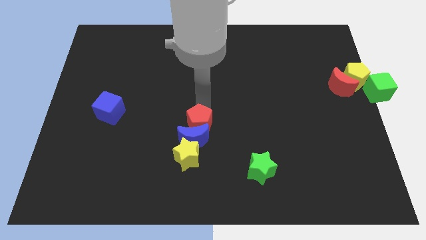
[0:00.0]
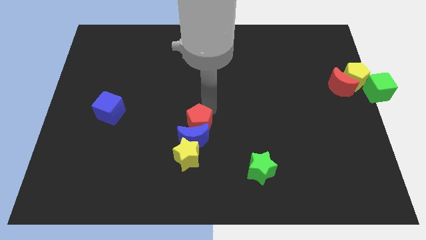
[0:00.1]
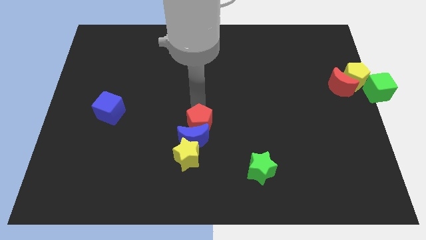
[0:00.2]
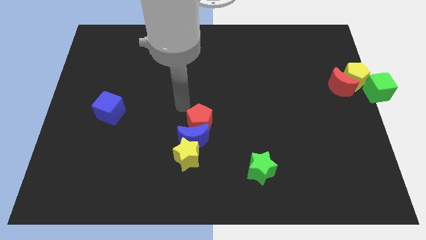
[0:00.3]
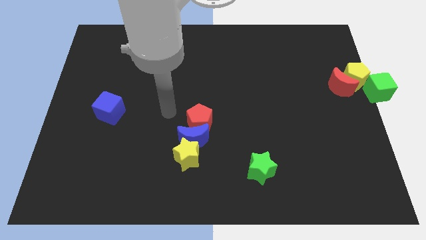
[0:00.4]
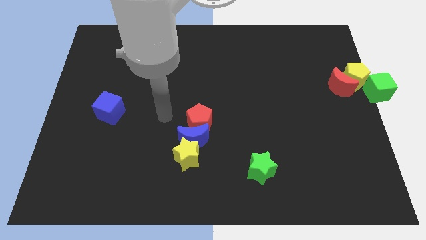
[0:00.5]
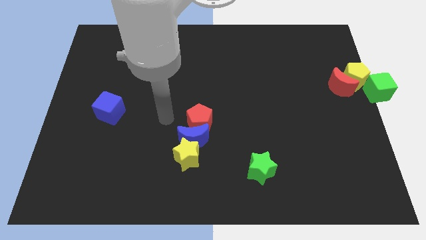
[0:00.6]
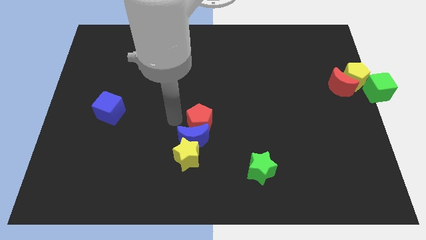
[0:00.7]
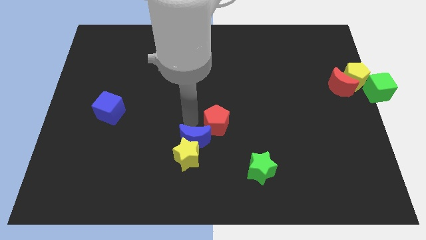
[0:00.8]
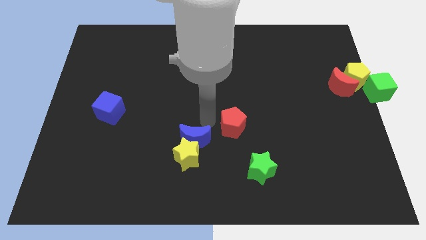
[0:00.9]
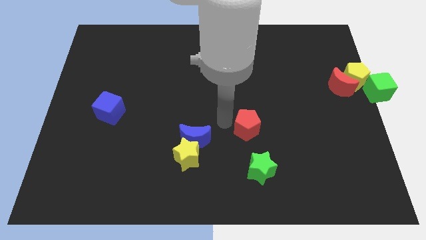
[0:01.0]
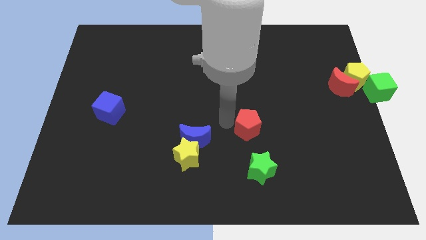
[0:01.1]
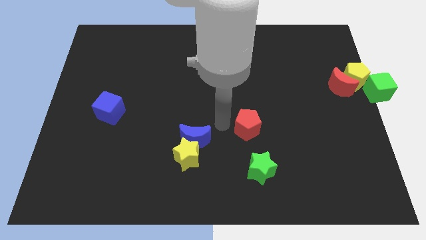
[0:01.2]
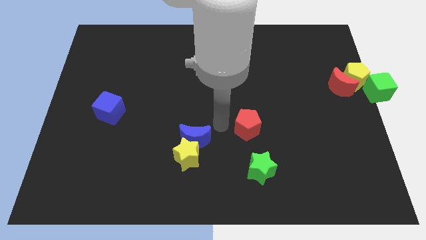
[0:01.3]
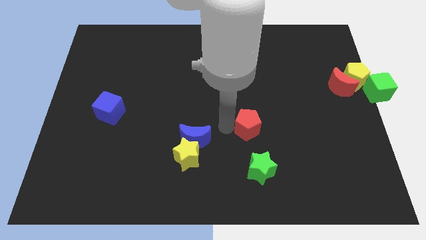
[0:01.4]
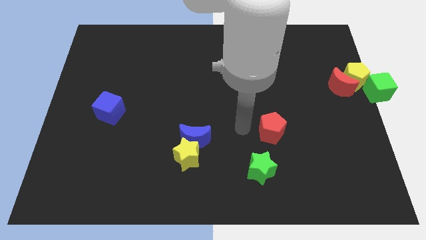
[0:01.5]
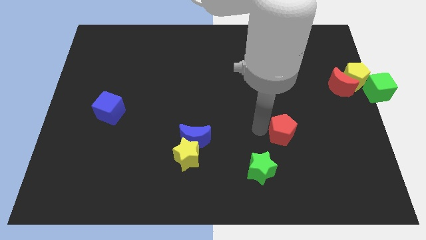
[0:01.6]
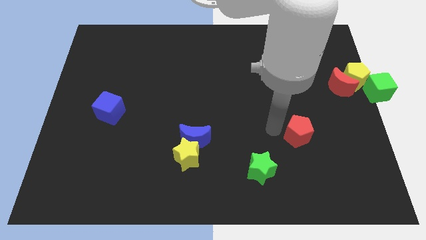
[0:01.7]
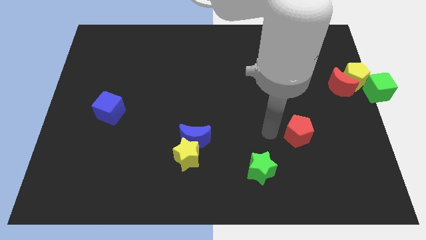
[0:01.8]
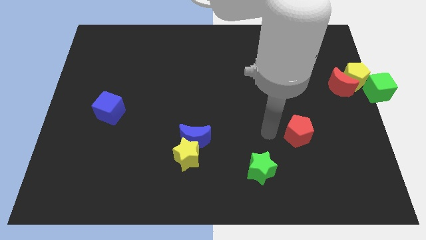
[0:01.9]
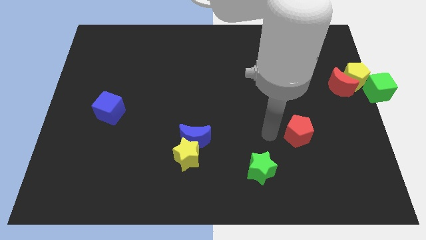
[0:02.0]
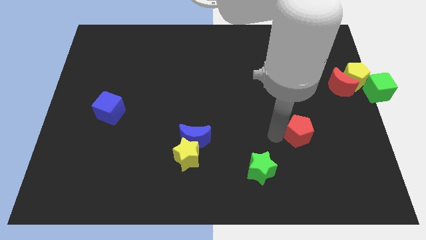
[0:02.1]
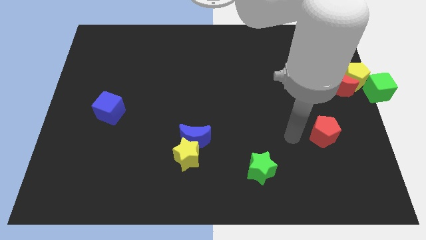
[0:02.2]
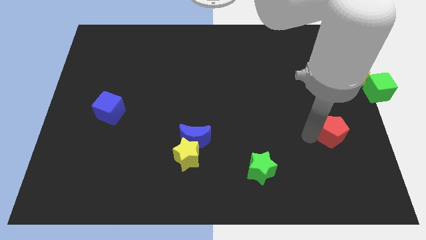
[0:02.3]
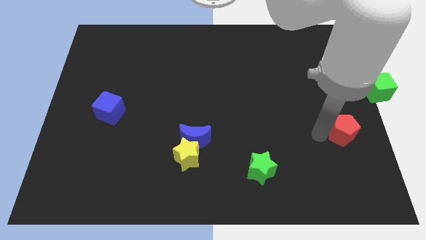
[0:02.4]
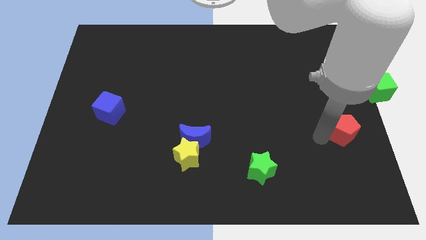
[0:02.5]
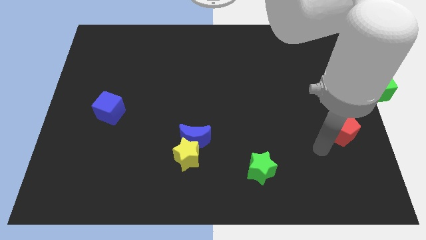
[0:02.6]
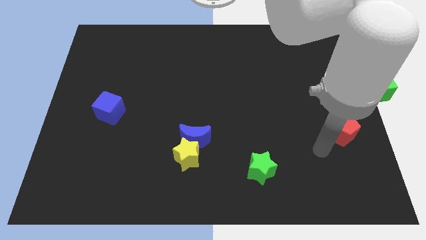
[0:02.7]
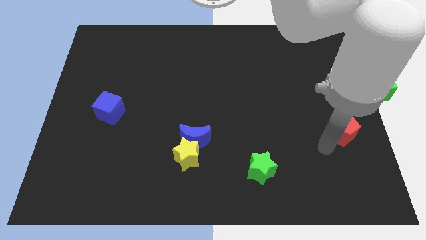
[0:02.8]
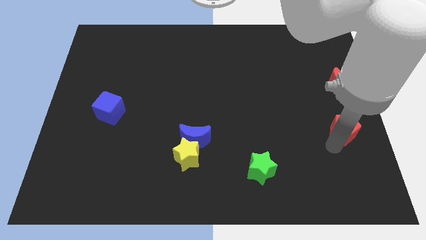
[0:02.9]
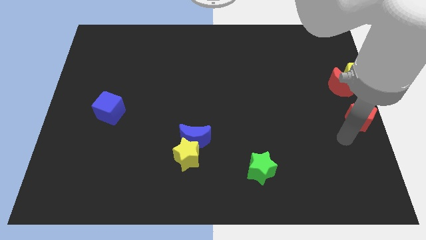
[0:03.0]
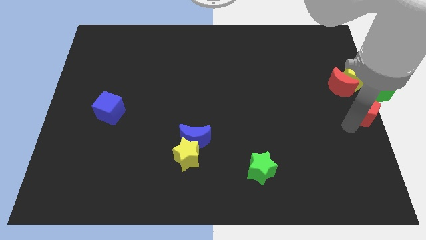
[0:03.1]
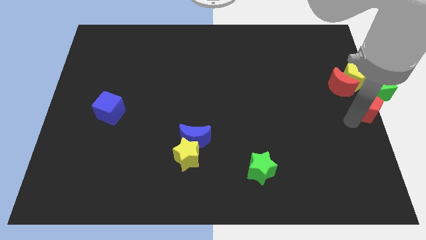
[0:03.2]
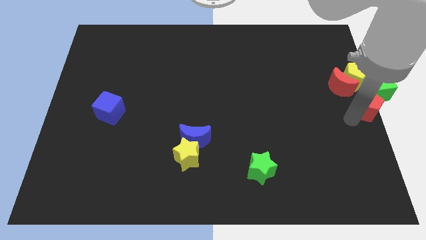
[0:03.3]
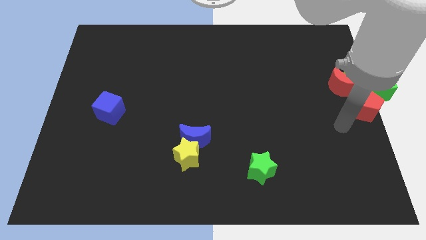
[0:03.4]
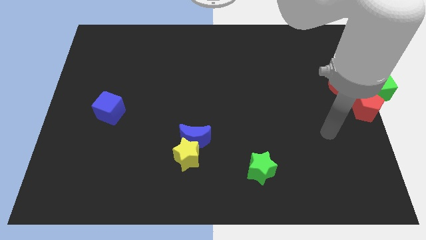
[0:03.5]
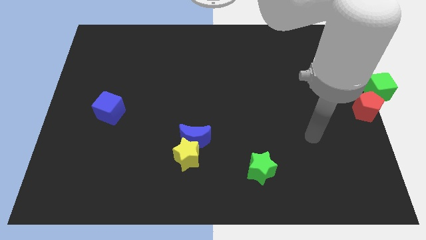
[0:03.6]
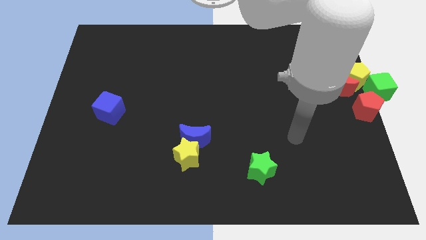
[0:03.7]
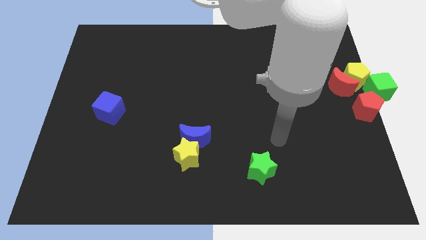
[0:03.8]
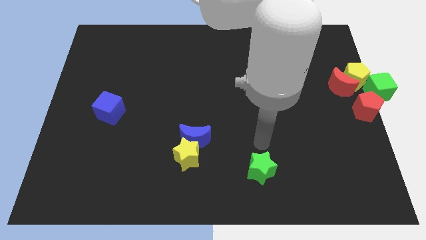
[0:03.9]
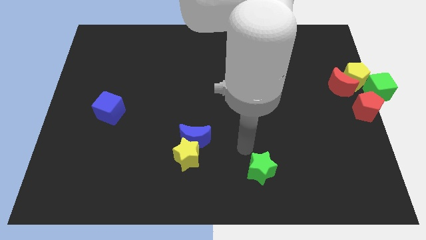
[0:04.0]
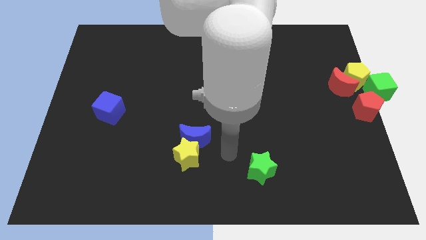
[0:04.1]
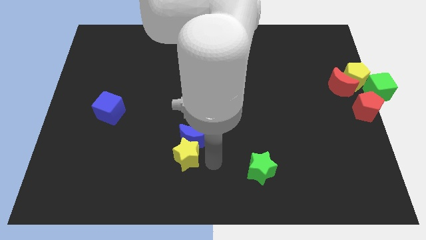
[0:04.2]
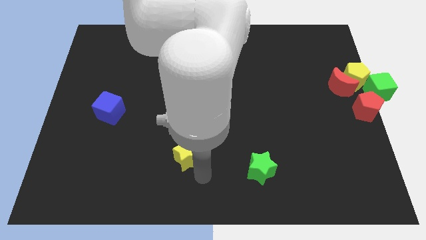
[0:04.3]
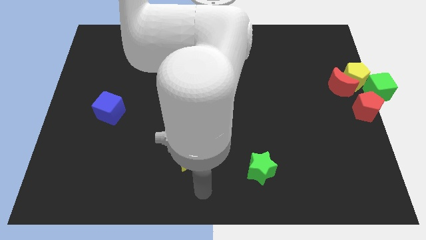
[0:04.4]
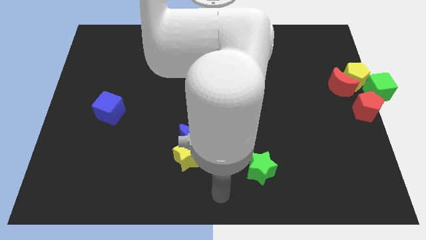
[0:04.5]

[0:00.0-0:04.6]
push red pentagon close to green cube

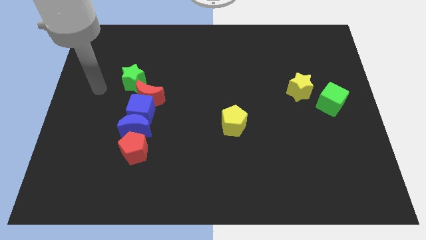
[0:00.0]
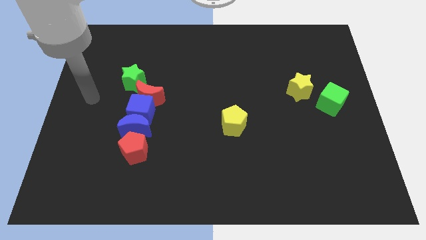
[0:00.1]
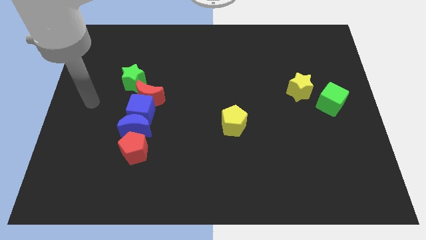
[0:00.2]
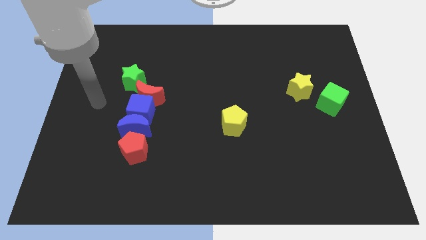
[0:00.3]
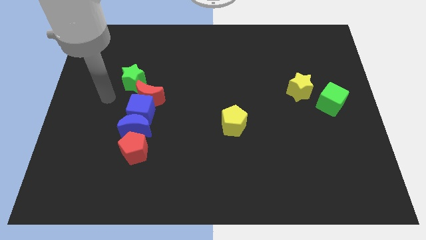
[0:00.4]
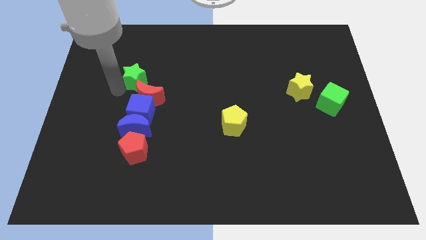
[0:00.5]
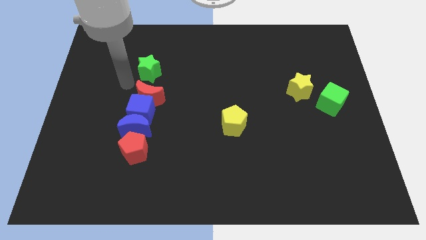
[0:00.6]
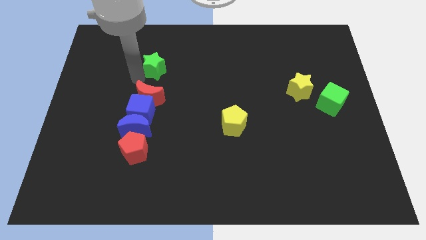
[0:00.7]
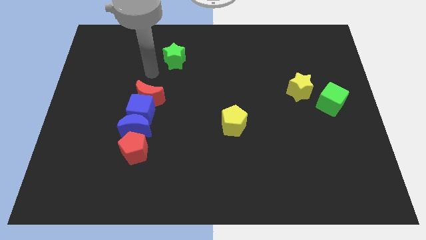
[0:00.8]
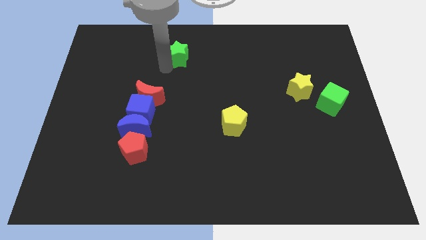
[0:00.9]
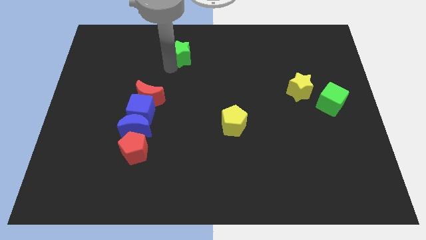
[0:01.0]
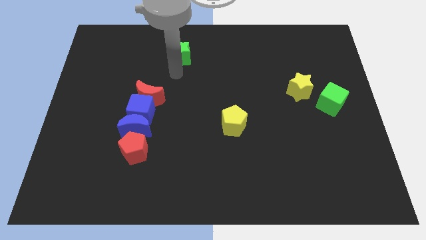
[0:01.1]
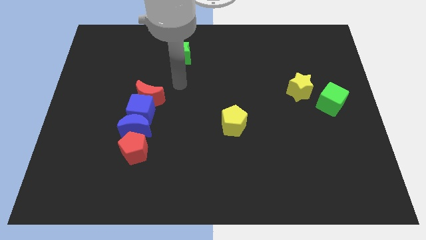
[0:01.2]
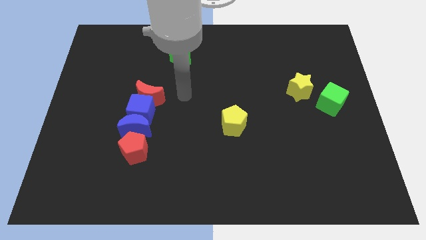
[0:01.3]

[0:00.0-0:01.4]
move the green star to the top centre of the board

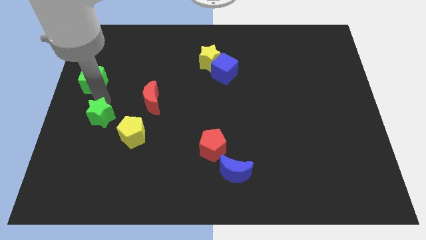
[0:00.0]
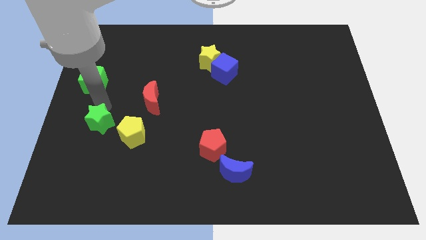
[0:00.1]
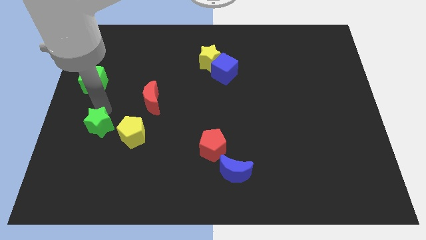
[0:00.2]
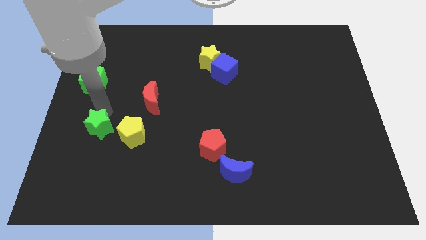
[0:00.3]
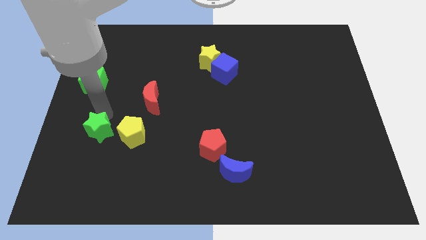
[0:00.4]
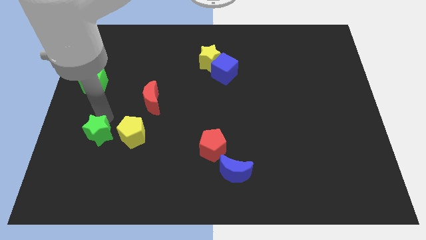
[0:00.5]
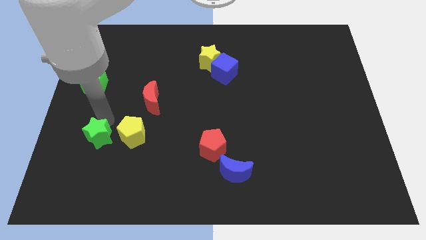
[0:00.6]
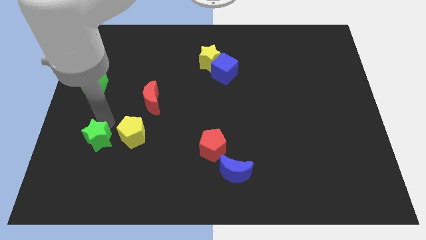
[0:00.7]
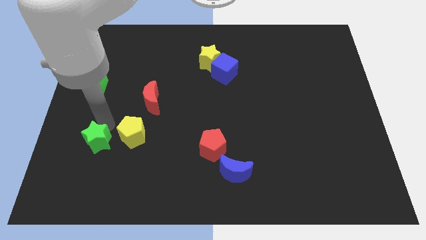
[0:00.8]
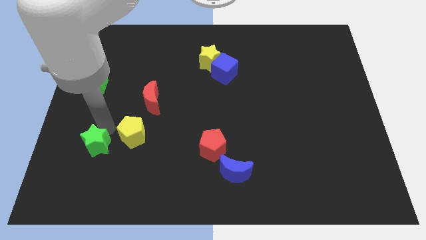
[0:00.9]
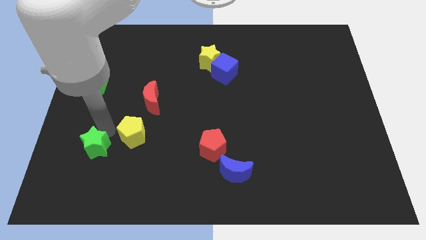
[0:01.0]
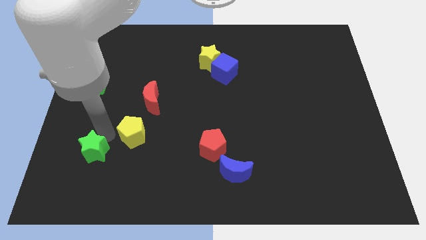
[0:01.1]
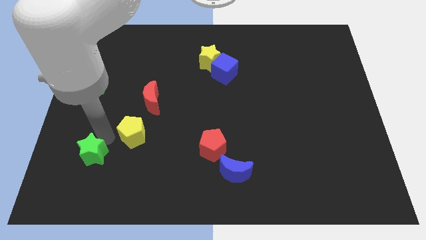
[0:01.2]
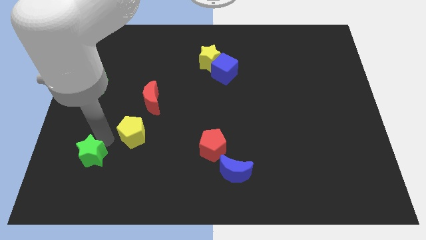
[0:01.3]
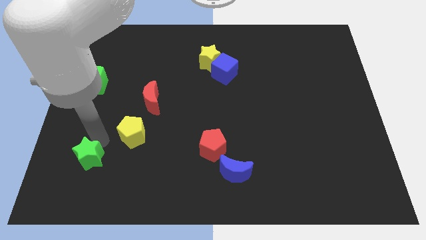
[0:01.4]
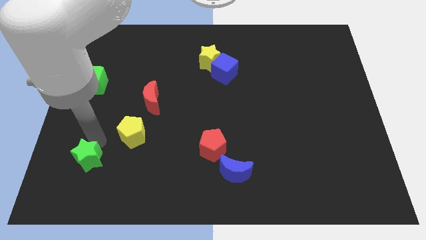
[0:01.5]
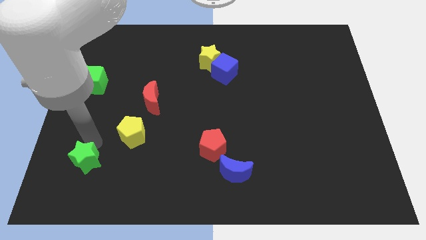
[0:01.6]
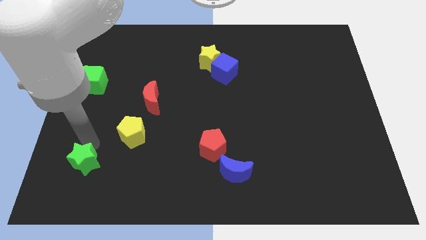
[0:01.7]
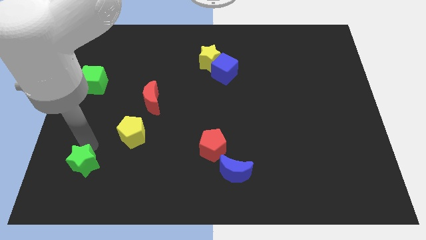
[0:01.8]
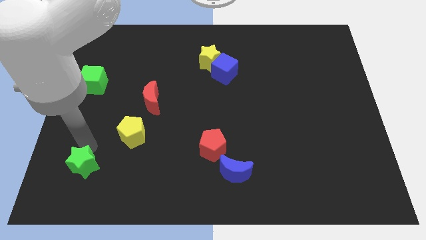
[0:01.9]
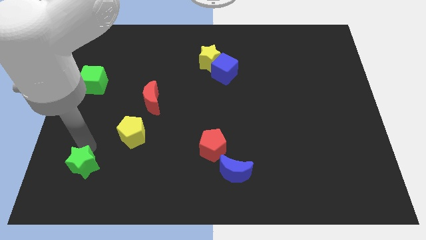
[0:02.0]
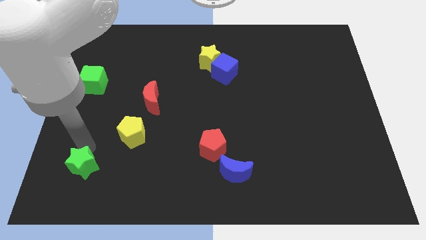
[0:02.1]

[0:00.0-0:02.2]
push the green star to the bottom

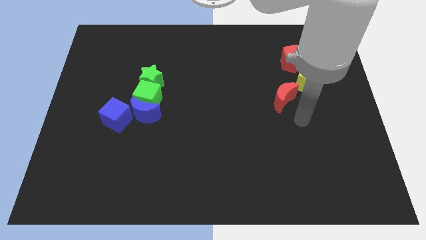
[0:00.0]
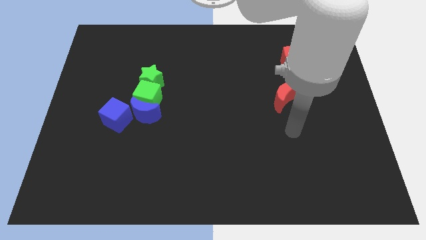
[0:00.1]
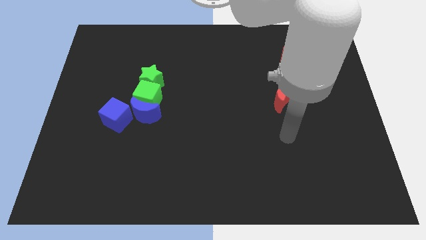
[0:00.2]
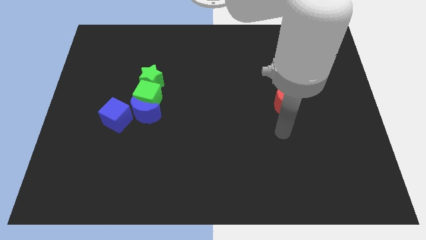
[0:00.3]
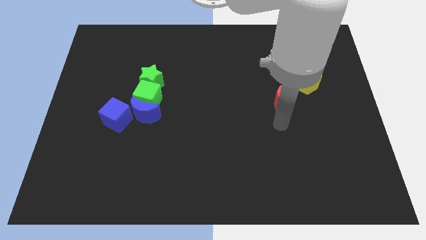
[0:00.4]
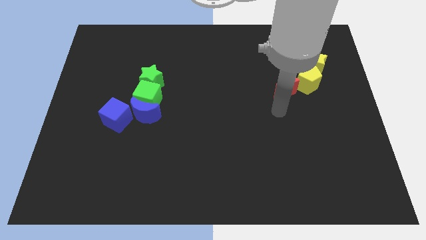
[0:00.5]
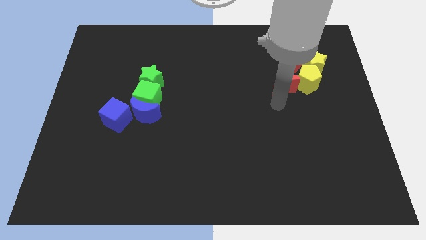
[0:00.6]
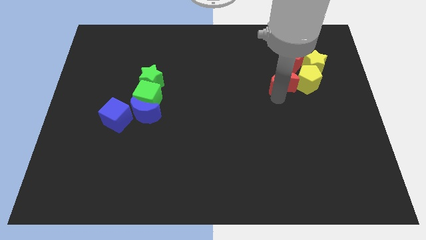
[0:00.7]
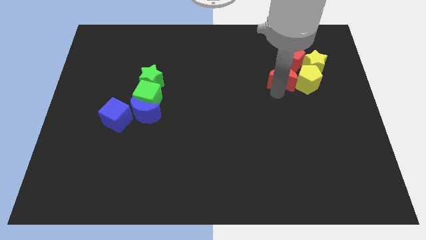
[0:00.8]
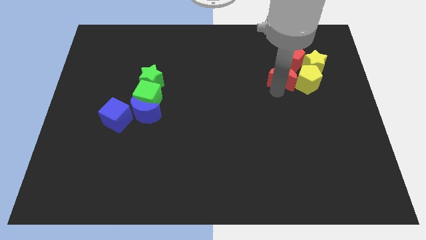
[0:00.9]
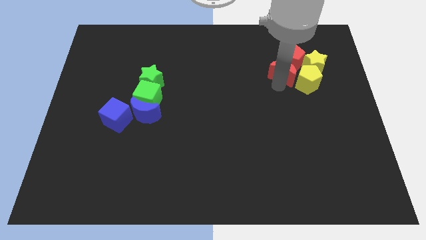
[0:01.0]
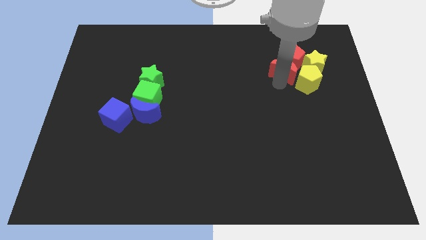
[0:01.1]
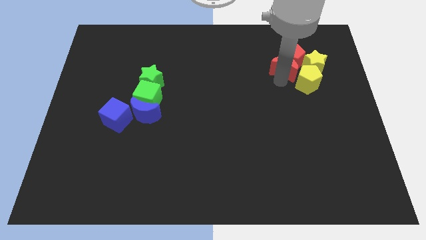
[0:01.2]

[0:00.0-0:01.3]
move the red crescent to the left of the yellow pentagon
